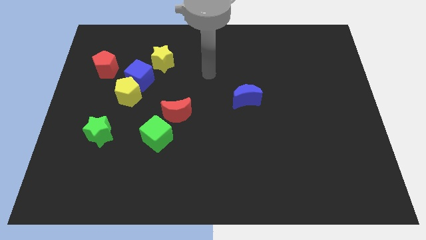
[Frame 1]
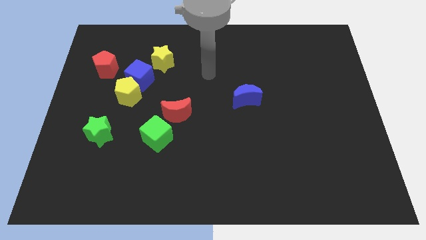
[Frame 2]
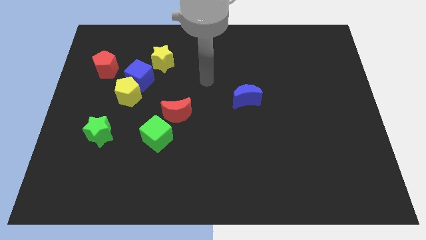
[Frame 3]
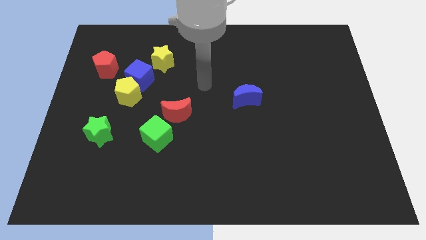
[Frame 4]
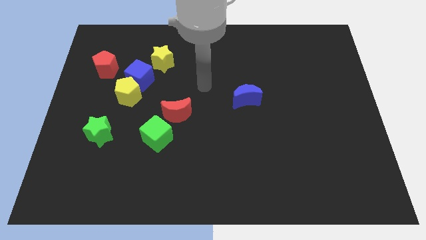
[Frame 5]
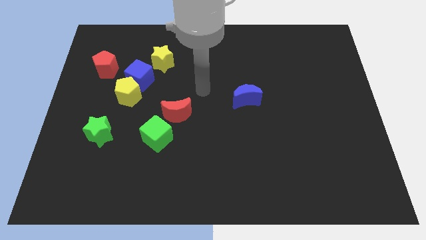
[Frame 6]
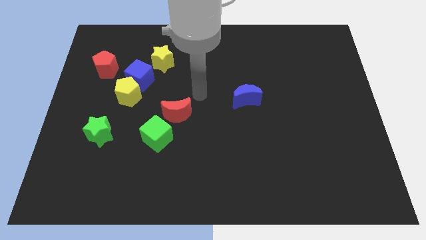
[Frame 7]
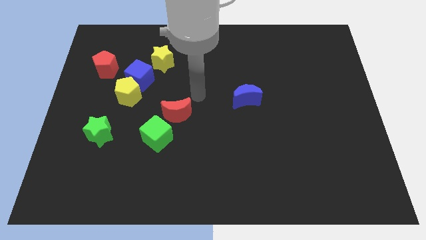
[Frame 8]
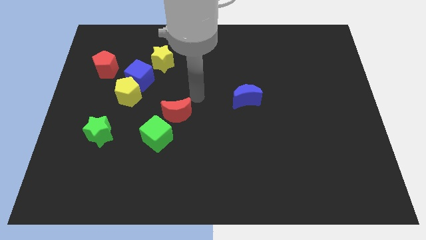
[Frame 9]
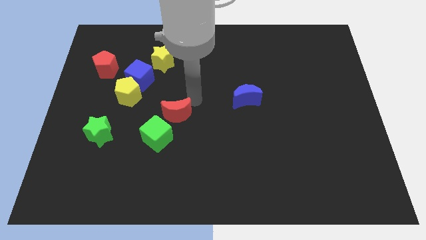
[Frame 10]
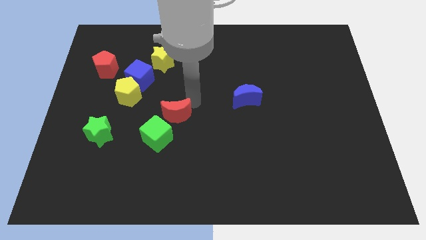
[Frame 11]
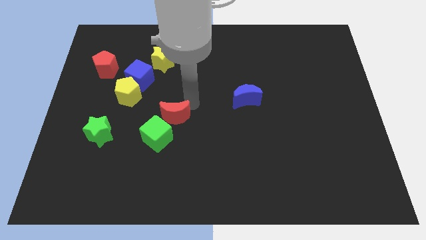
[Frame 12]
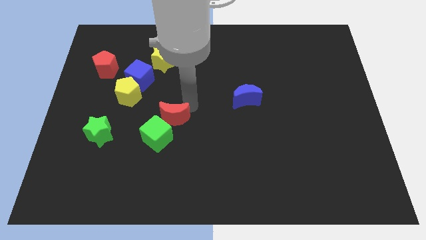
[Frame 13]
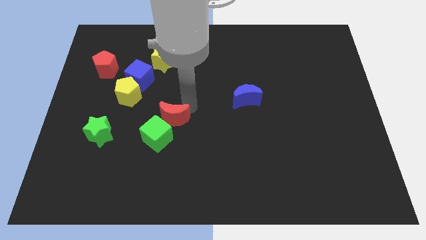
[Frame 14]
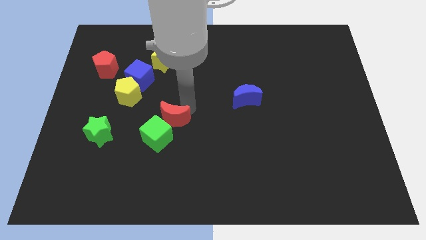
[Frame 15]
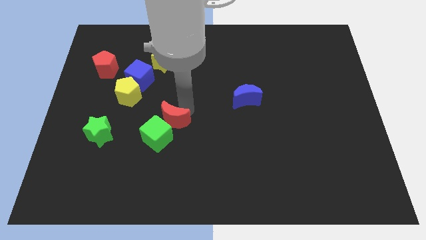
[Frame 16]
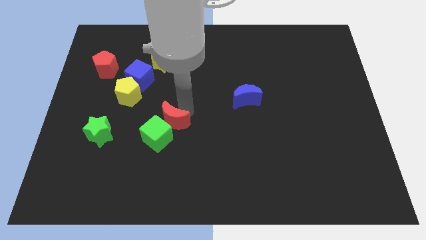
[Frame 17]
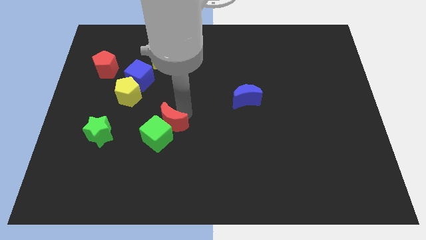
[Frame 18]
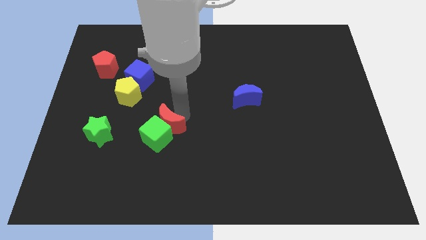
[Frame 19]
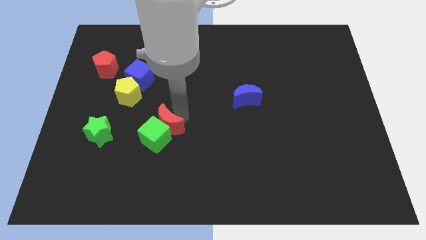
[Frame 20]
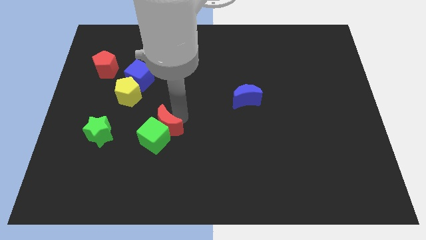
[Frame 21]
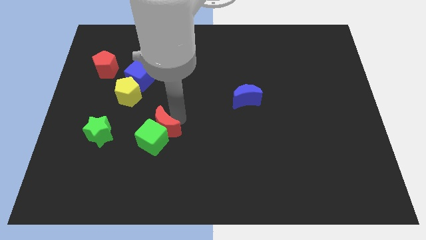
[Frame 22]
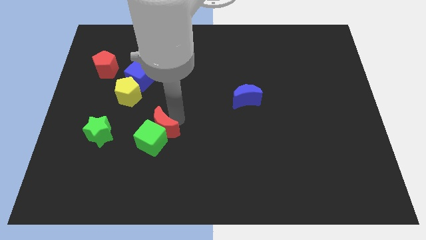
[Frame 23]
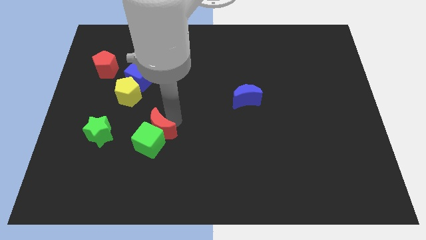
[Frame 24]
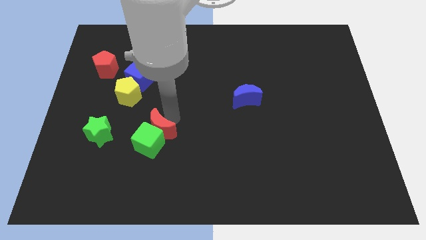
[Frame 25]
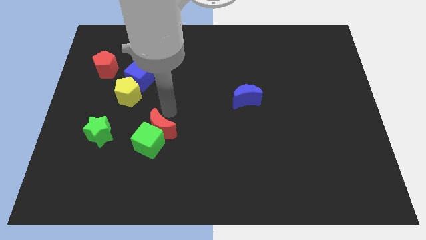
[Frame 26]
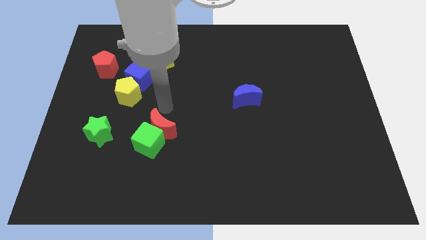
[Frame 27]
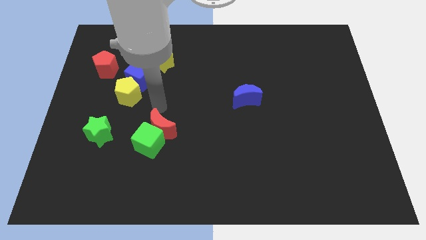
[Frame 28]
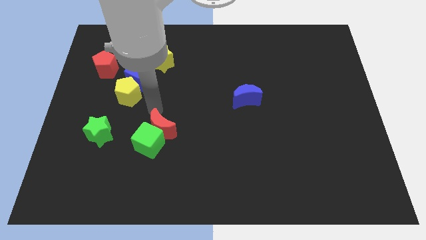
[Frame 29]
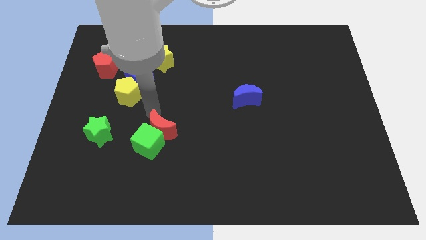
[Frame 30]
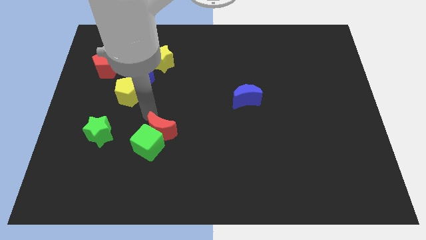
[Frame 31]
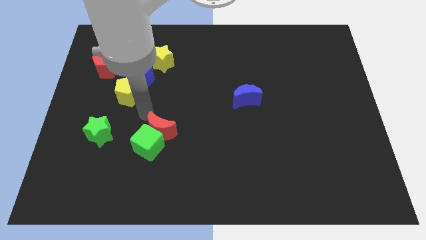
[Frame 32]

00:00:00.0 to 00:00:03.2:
push the red moon and green cube towards the bottom side of the board

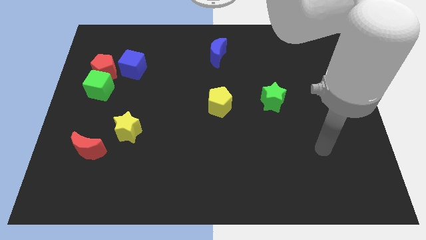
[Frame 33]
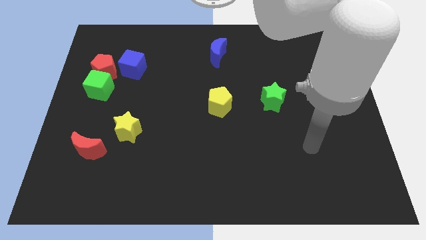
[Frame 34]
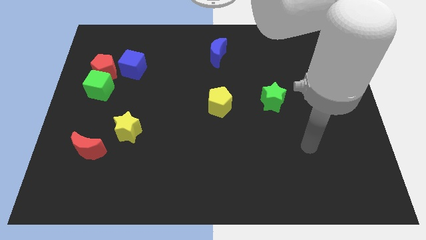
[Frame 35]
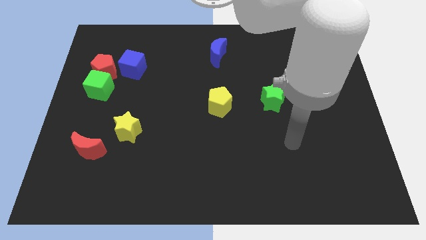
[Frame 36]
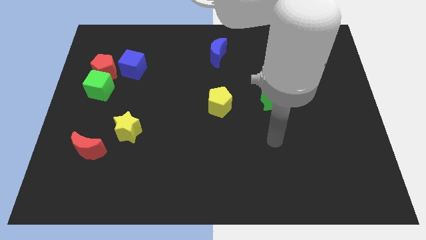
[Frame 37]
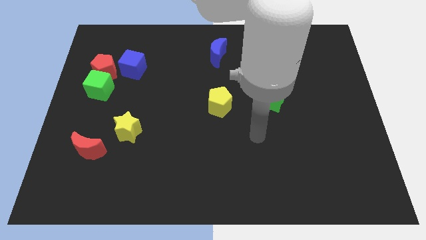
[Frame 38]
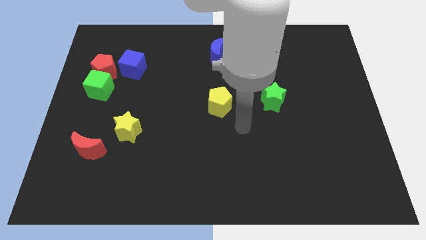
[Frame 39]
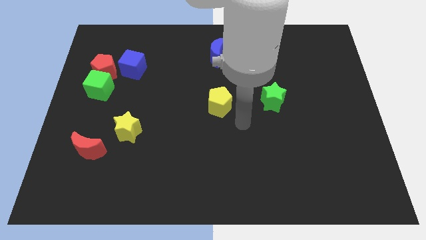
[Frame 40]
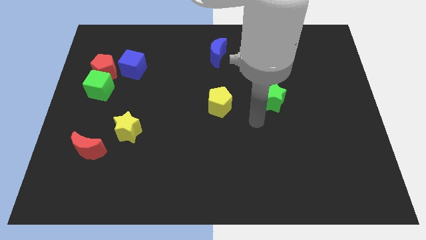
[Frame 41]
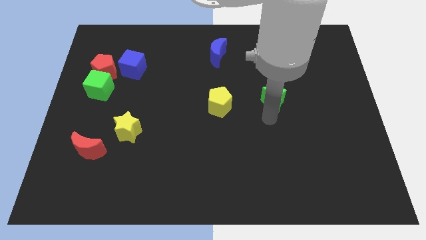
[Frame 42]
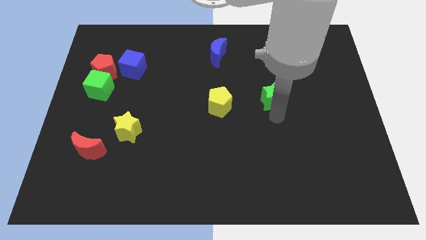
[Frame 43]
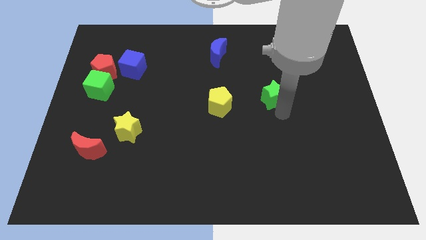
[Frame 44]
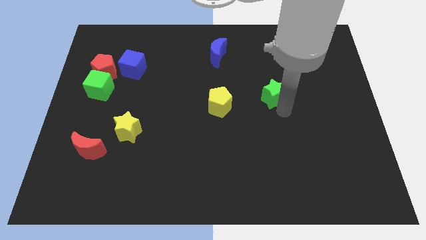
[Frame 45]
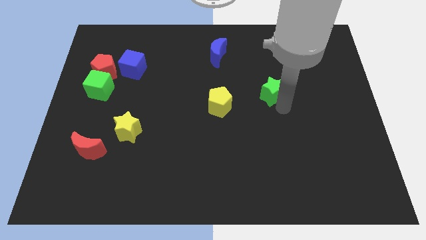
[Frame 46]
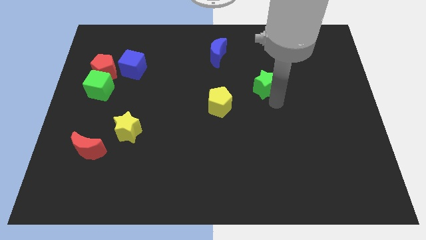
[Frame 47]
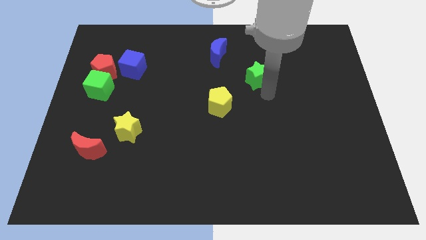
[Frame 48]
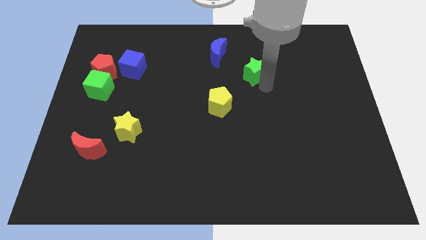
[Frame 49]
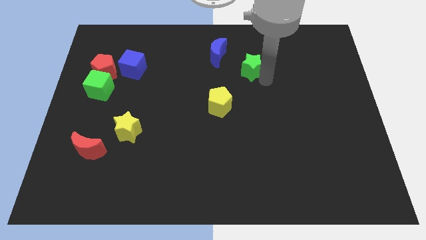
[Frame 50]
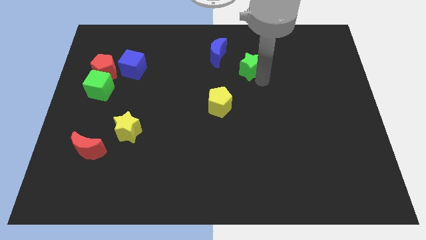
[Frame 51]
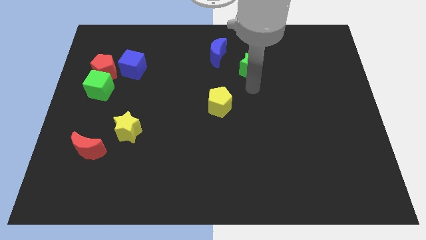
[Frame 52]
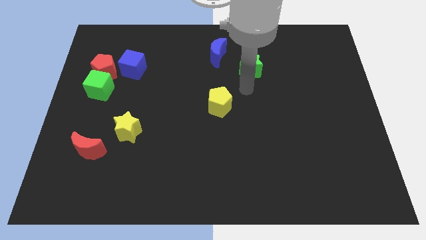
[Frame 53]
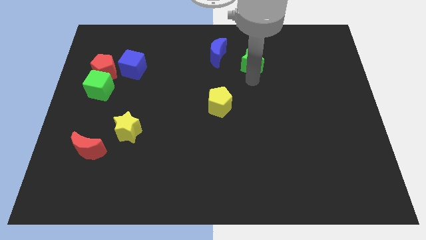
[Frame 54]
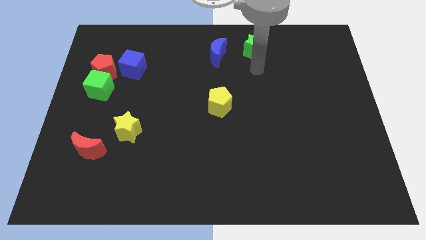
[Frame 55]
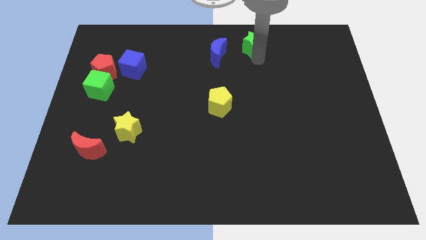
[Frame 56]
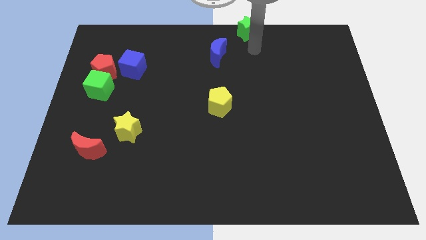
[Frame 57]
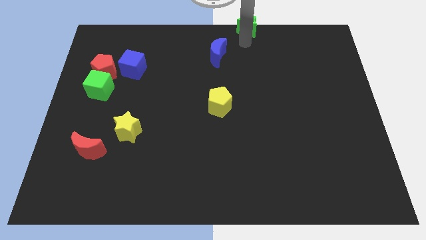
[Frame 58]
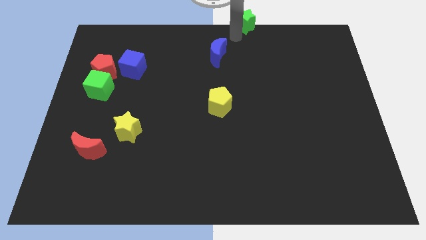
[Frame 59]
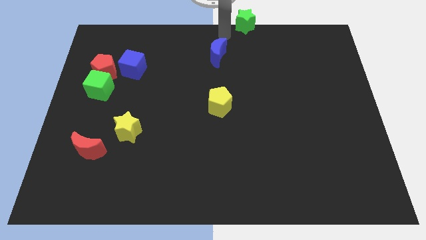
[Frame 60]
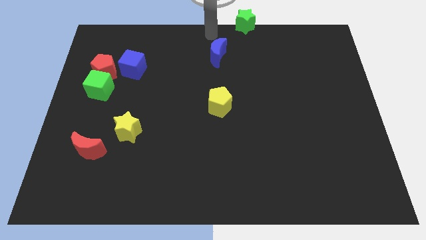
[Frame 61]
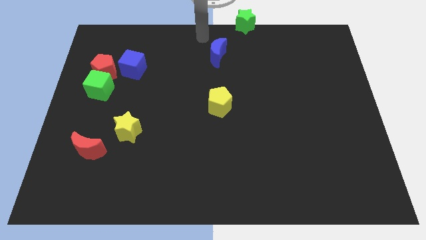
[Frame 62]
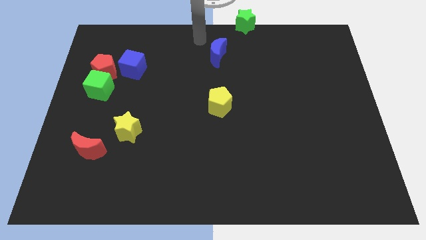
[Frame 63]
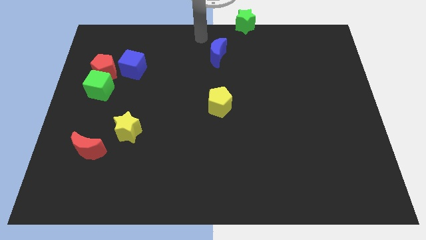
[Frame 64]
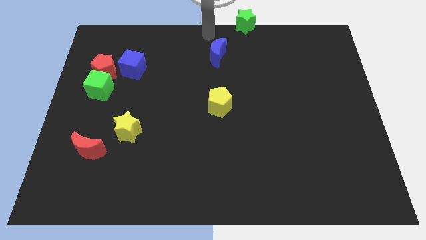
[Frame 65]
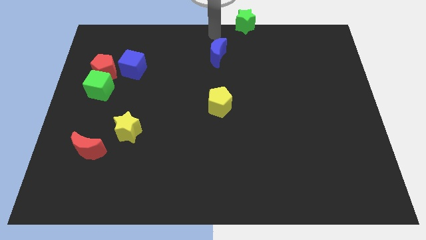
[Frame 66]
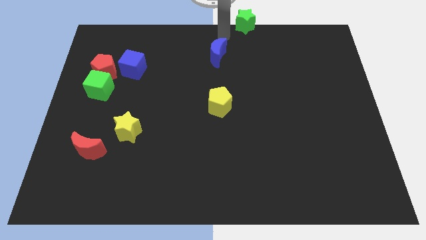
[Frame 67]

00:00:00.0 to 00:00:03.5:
push the green star parallel to the blue crescent

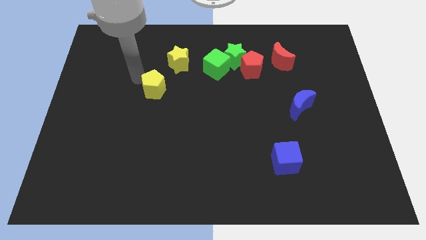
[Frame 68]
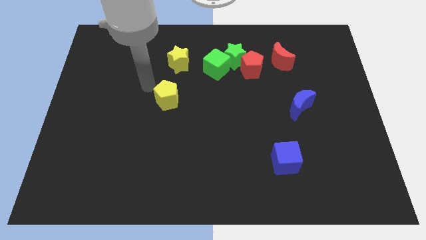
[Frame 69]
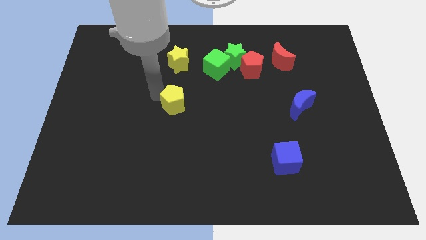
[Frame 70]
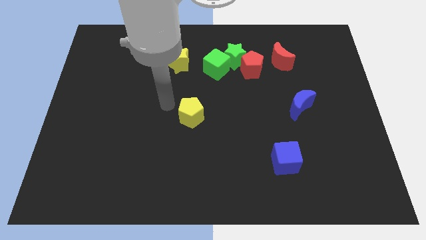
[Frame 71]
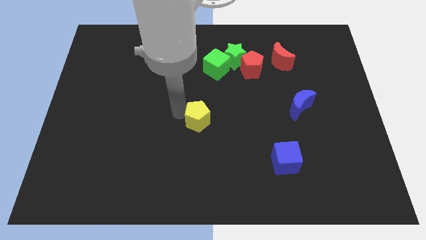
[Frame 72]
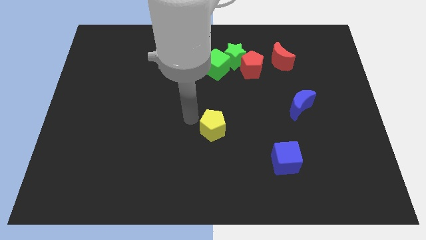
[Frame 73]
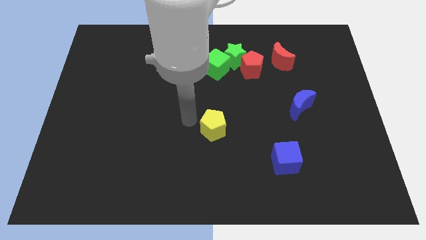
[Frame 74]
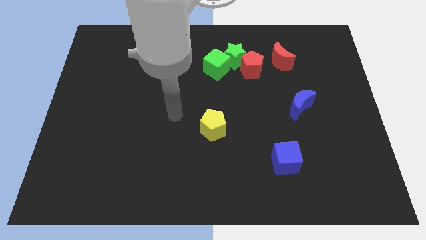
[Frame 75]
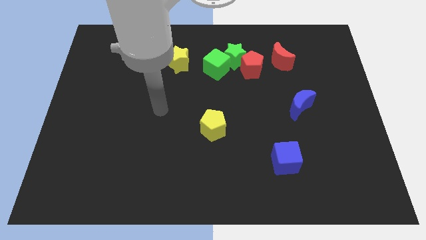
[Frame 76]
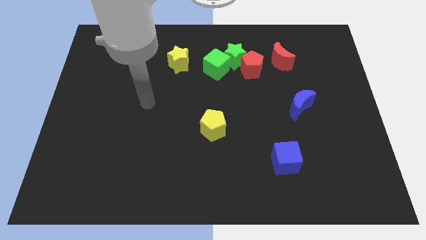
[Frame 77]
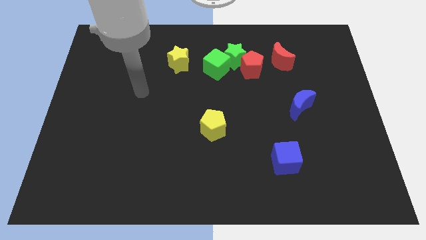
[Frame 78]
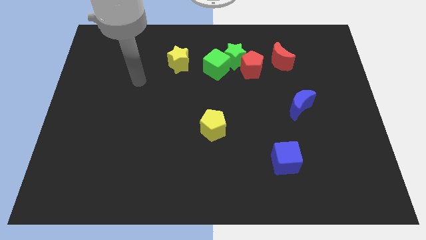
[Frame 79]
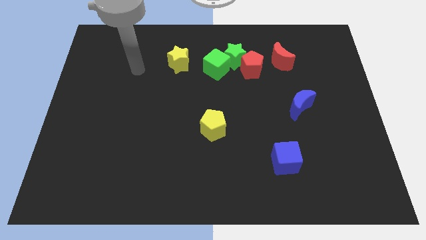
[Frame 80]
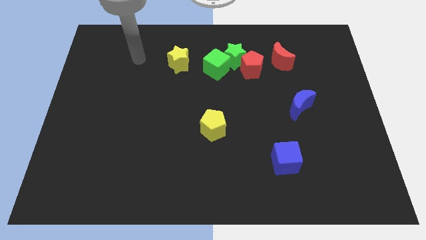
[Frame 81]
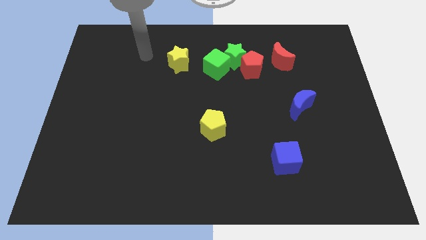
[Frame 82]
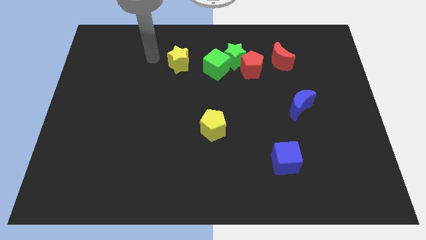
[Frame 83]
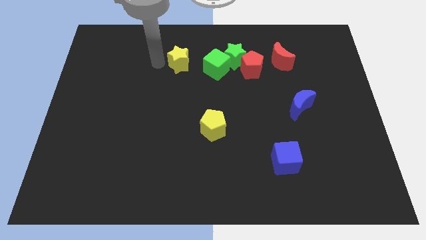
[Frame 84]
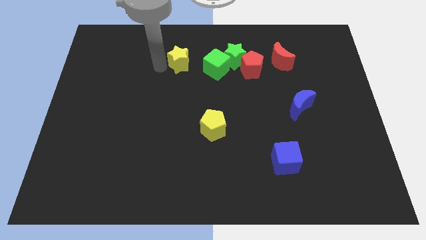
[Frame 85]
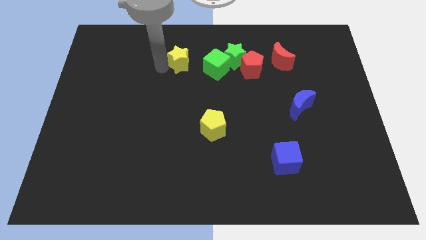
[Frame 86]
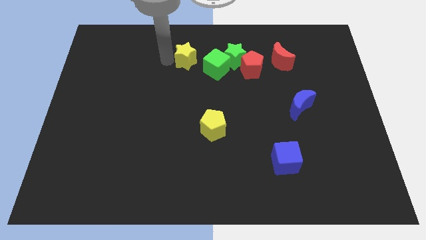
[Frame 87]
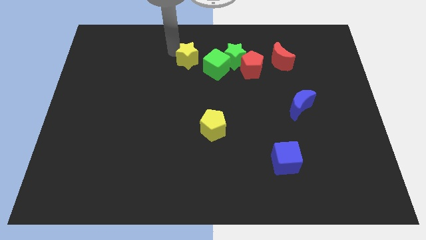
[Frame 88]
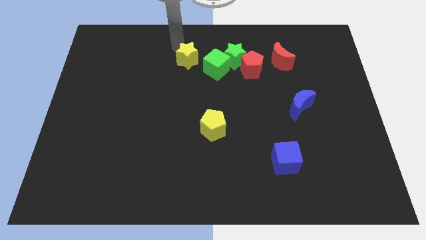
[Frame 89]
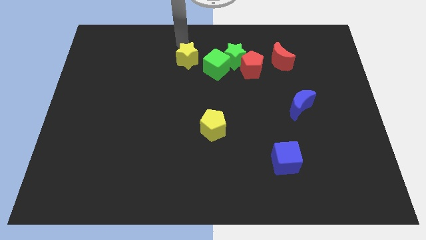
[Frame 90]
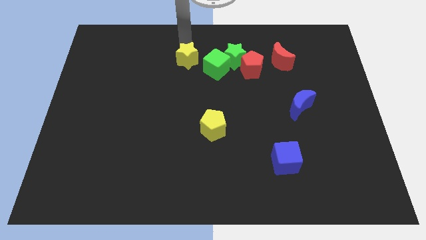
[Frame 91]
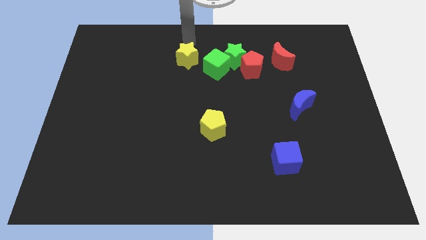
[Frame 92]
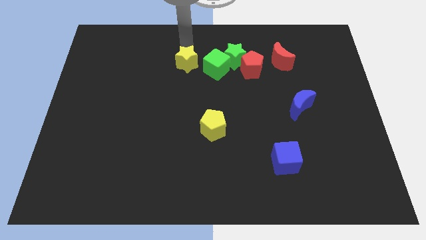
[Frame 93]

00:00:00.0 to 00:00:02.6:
move the yellow pentagon slightly down
